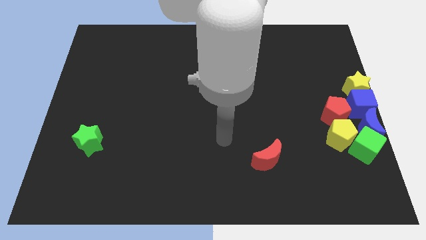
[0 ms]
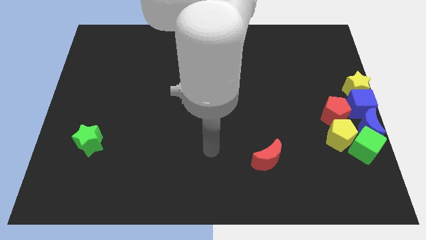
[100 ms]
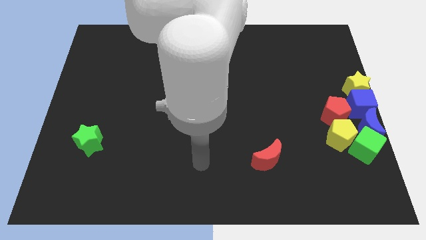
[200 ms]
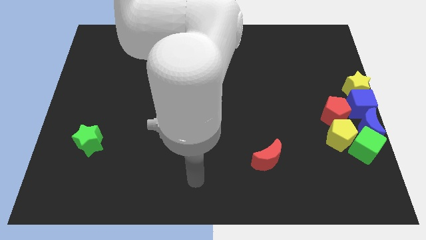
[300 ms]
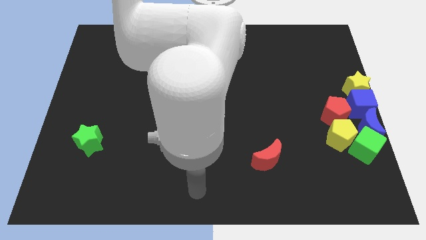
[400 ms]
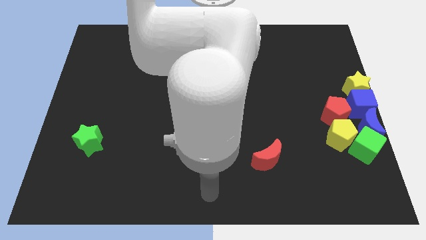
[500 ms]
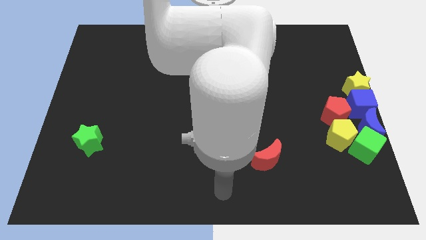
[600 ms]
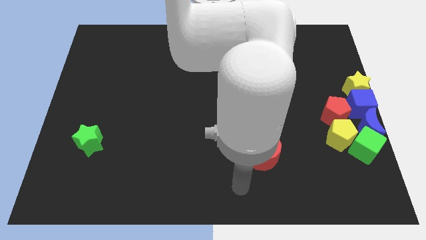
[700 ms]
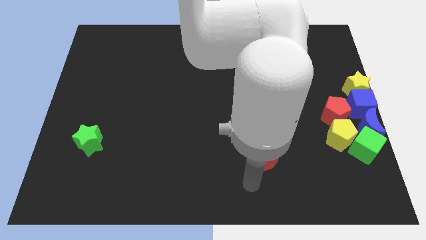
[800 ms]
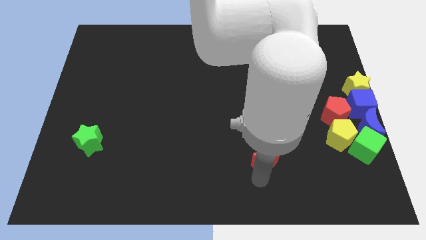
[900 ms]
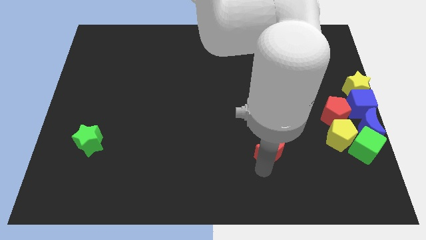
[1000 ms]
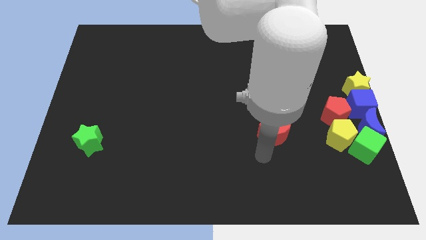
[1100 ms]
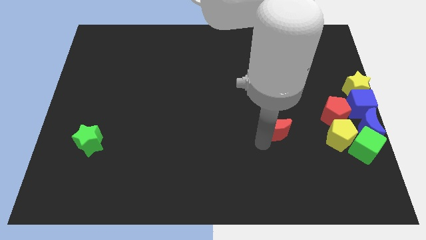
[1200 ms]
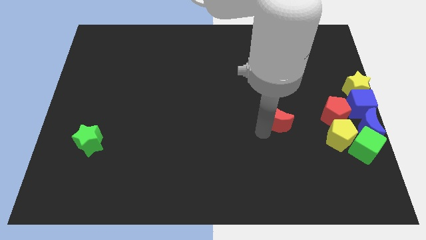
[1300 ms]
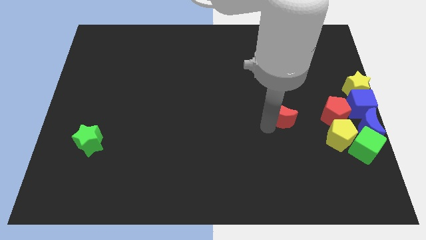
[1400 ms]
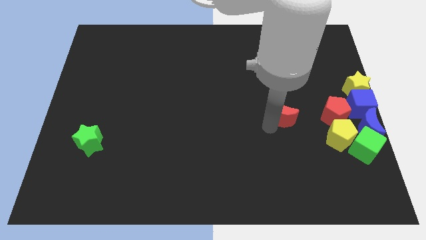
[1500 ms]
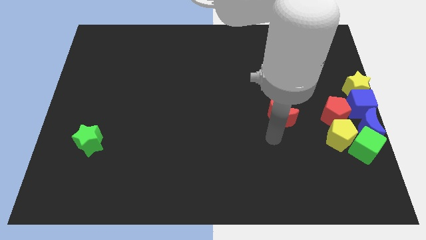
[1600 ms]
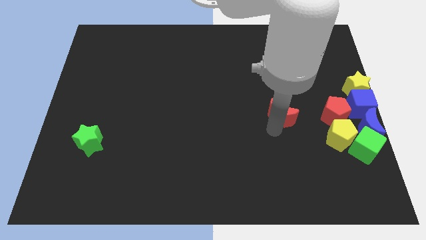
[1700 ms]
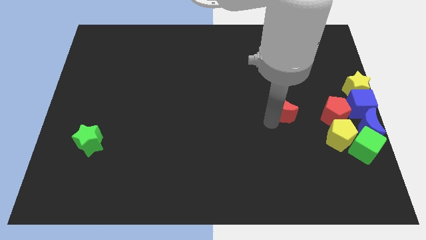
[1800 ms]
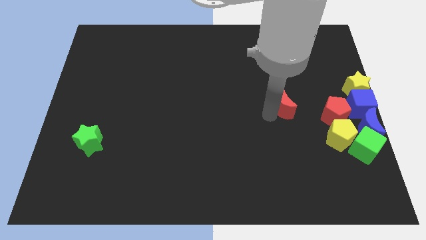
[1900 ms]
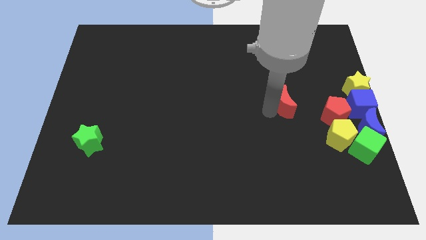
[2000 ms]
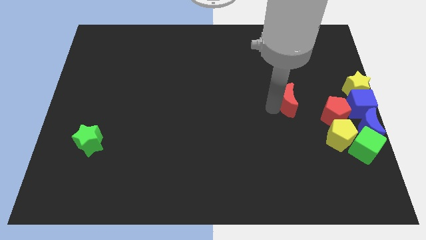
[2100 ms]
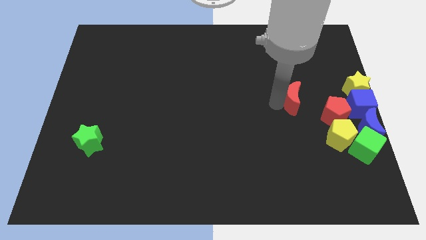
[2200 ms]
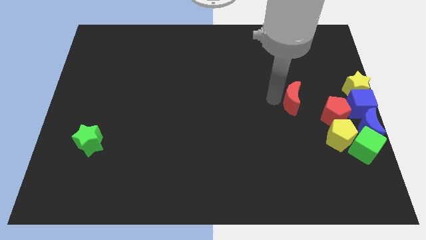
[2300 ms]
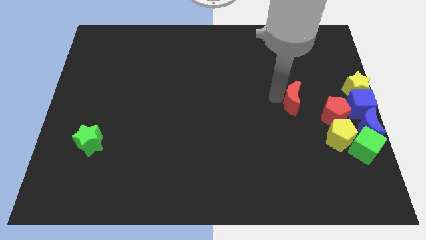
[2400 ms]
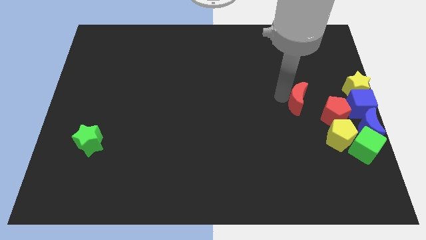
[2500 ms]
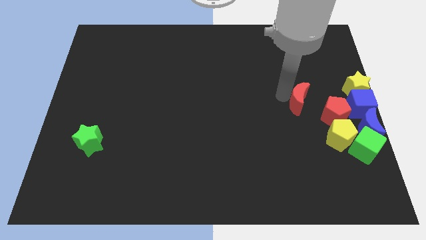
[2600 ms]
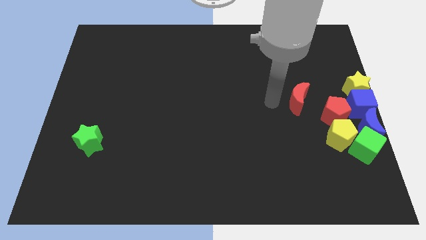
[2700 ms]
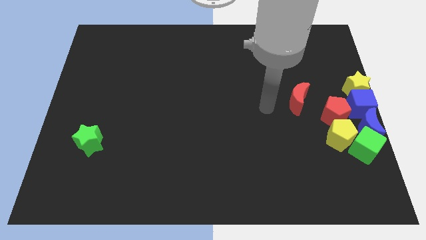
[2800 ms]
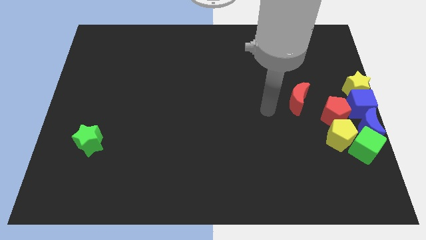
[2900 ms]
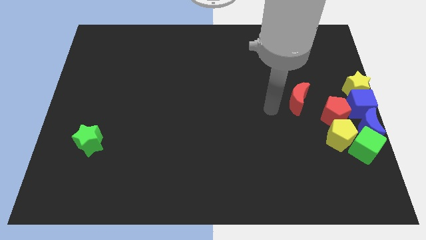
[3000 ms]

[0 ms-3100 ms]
move red moon to the right center of the board

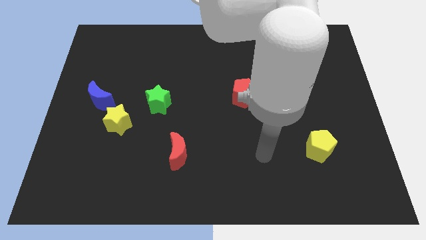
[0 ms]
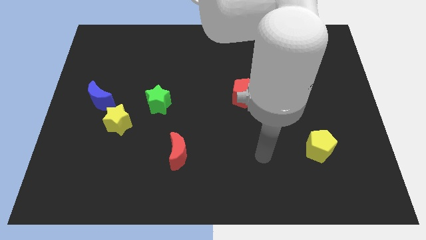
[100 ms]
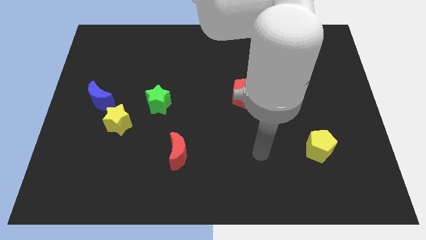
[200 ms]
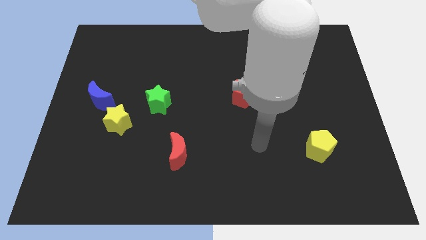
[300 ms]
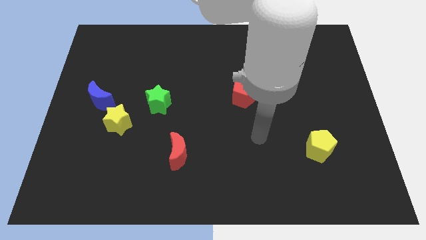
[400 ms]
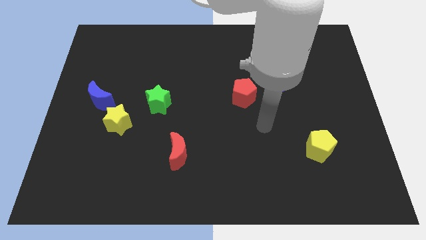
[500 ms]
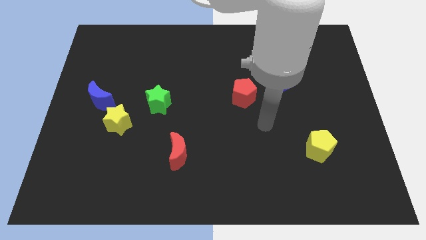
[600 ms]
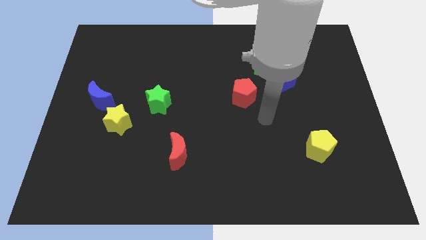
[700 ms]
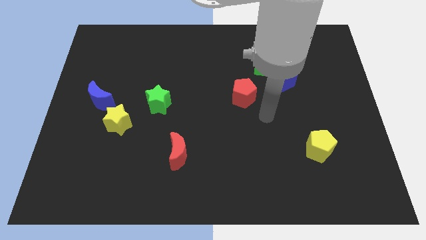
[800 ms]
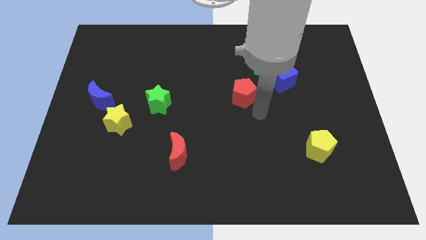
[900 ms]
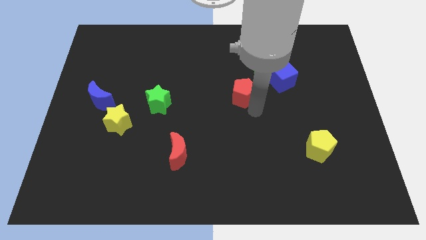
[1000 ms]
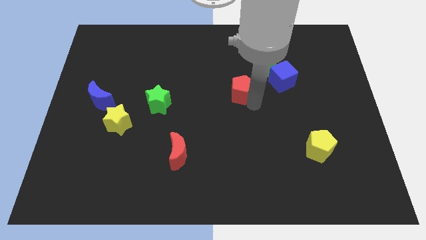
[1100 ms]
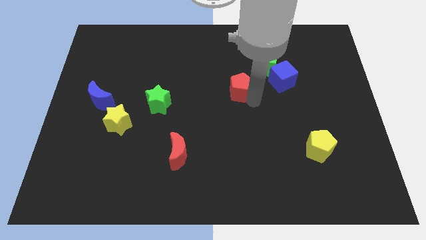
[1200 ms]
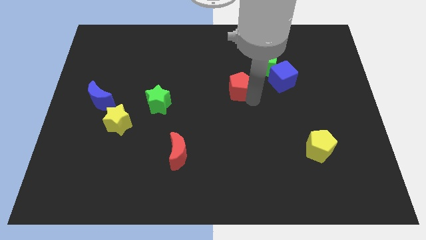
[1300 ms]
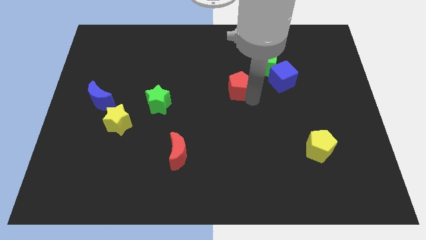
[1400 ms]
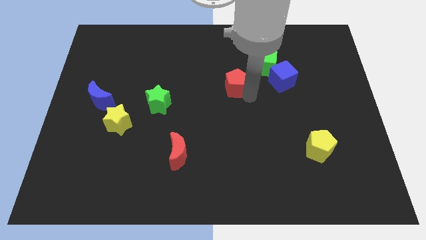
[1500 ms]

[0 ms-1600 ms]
slightly push the red pentagon upwards

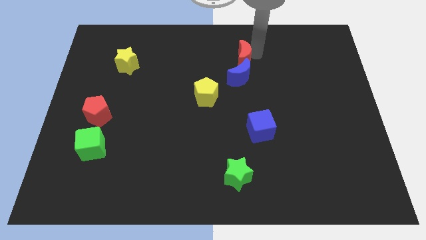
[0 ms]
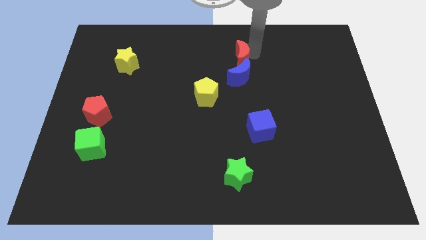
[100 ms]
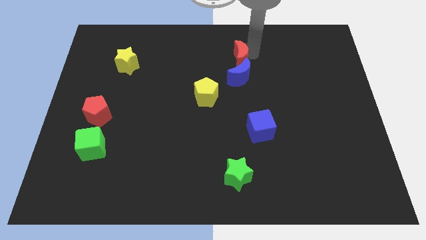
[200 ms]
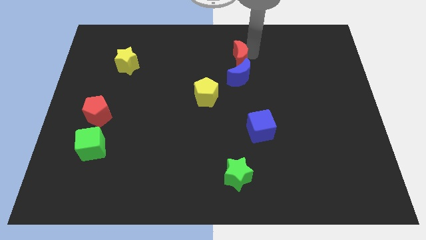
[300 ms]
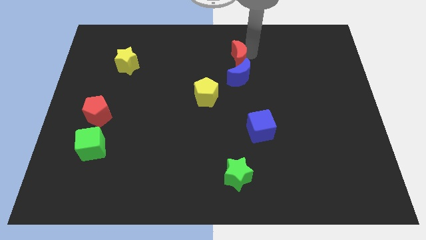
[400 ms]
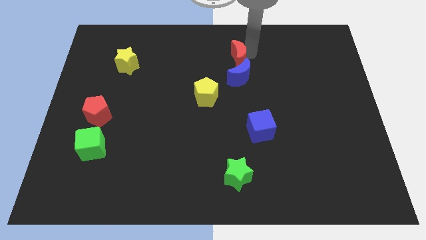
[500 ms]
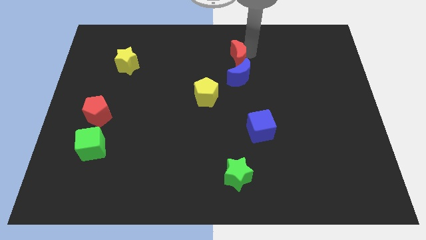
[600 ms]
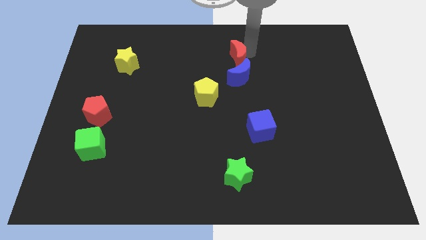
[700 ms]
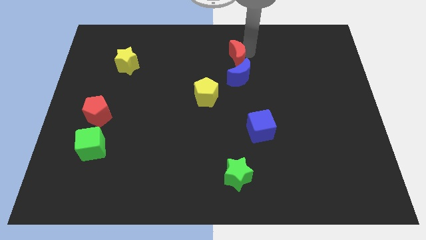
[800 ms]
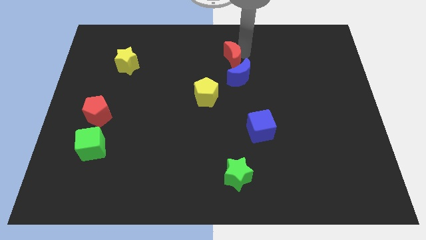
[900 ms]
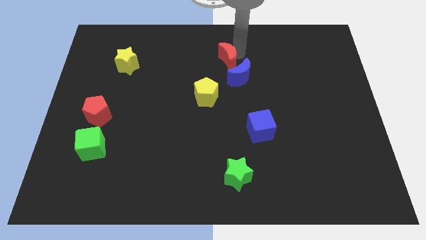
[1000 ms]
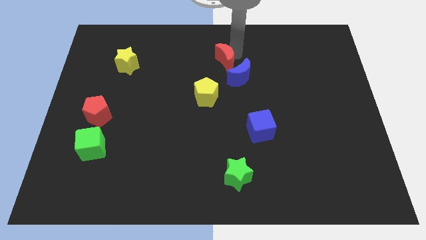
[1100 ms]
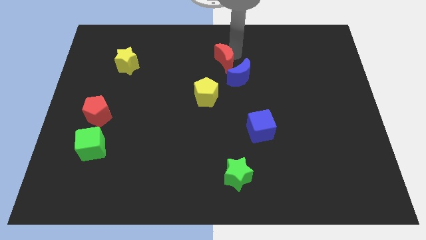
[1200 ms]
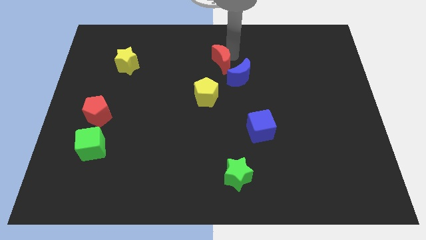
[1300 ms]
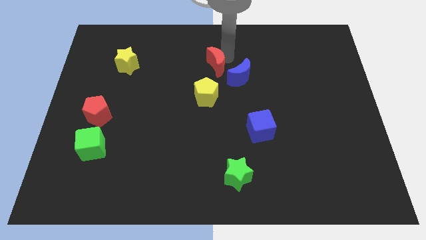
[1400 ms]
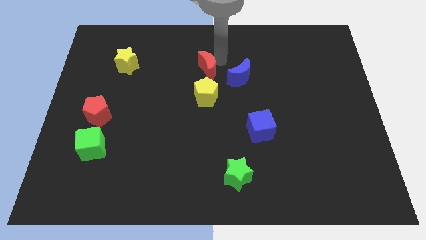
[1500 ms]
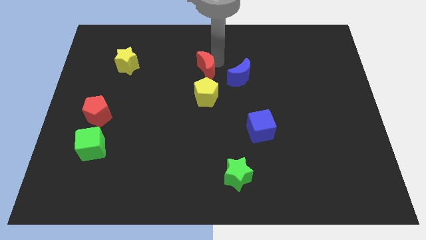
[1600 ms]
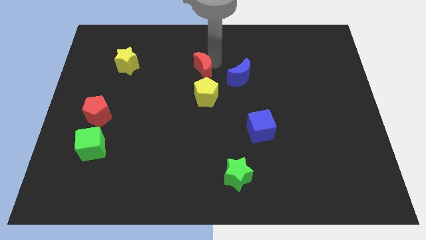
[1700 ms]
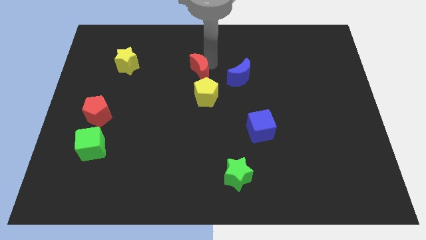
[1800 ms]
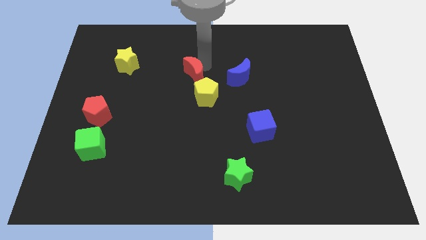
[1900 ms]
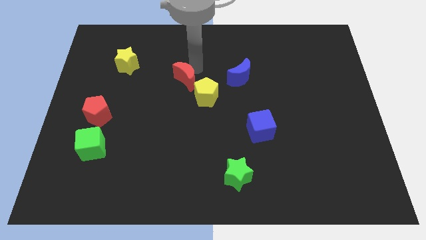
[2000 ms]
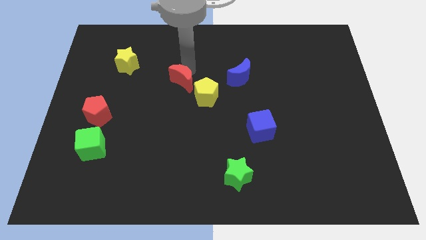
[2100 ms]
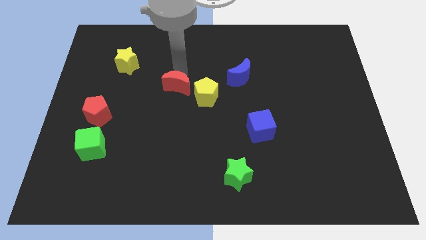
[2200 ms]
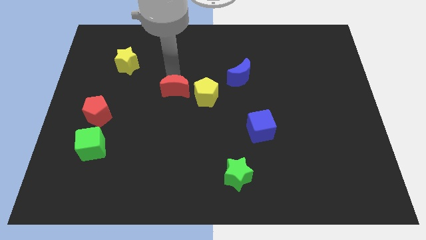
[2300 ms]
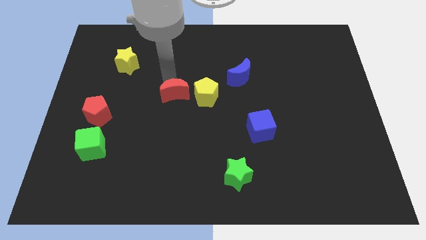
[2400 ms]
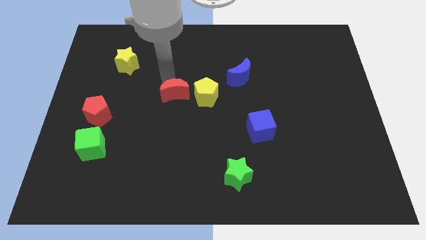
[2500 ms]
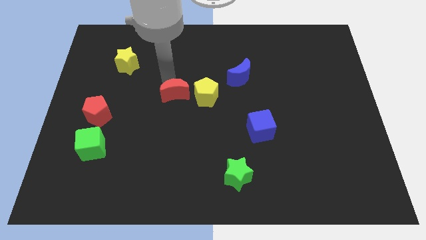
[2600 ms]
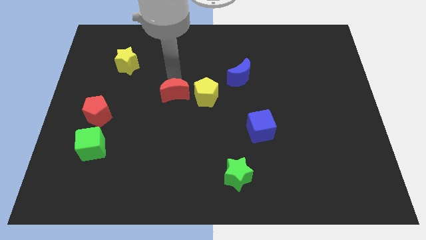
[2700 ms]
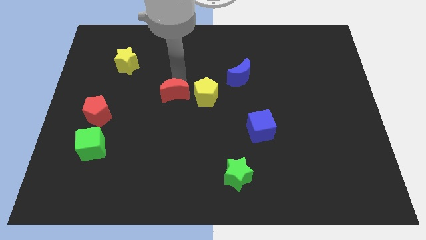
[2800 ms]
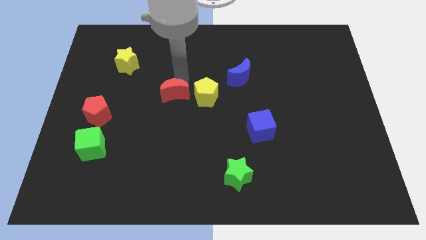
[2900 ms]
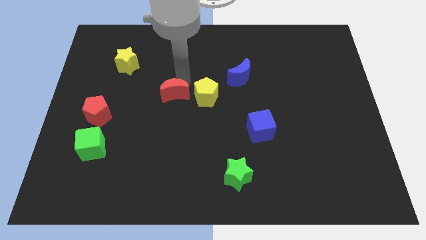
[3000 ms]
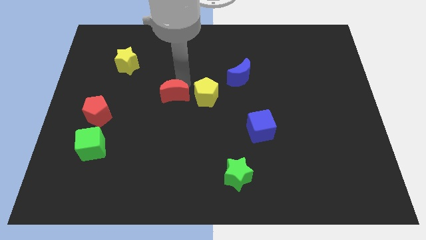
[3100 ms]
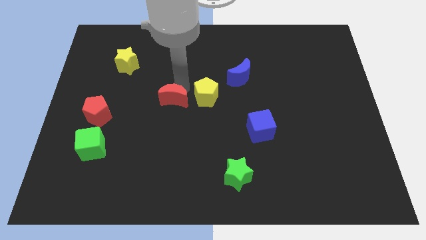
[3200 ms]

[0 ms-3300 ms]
push red crescent diagonally bottom left to the blue moon

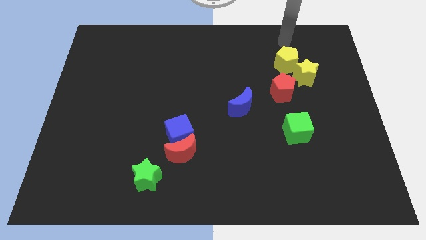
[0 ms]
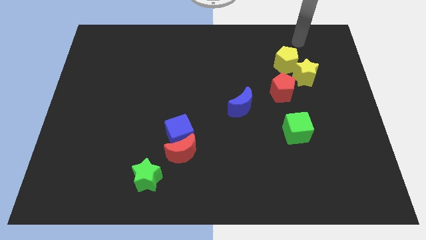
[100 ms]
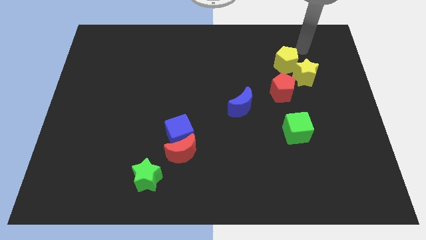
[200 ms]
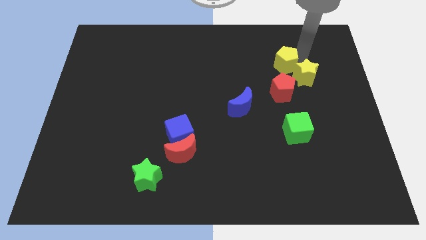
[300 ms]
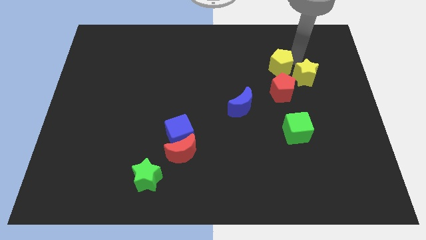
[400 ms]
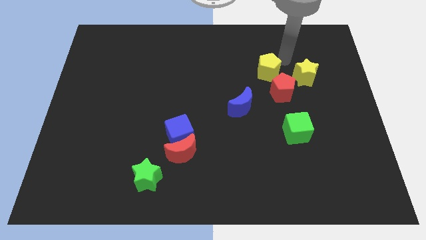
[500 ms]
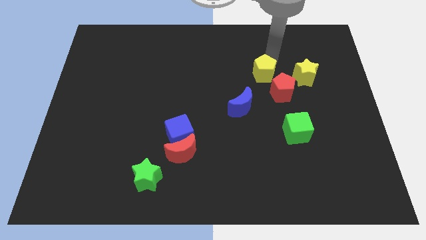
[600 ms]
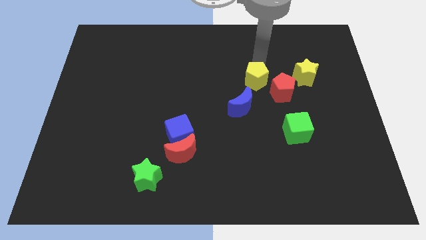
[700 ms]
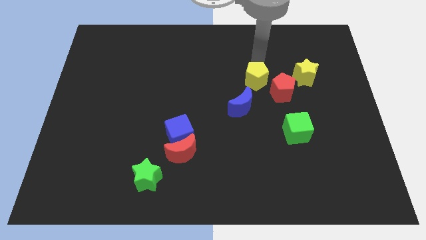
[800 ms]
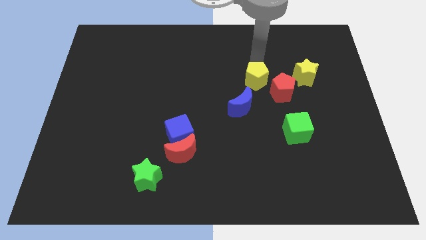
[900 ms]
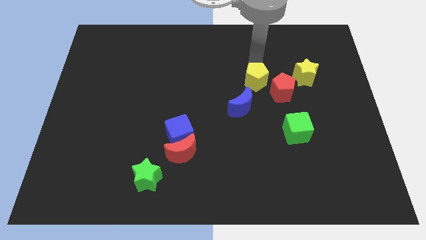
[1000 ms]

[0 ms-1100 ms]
place yellow pentagon to the top of the blue moon
